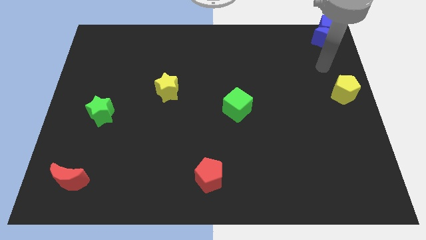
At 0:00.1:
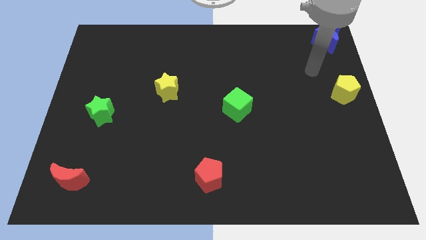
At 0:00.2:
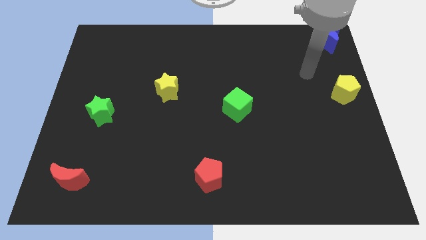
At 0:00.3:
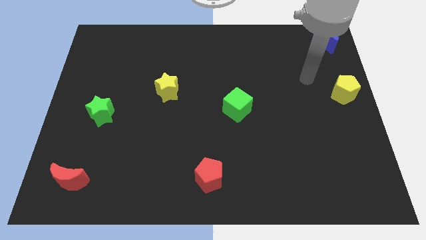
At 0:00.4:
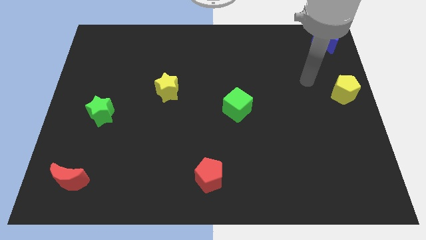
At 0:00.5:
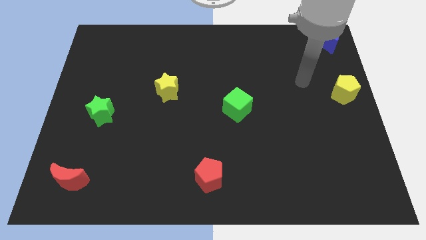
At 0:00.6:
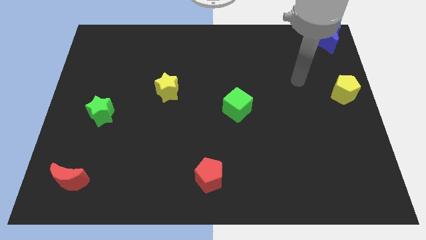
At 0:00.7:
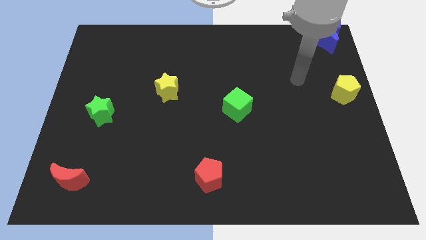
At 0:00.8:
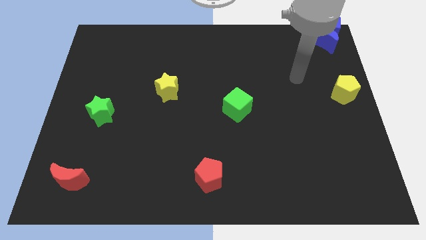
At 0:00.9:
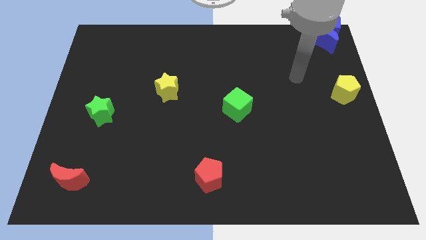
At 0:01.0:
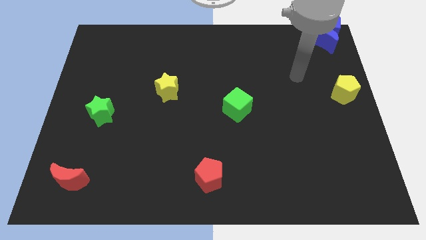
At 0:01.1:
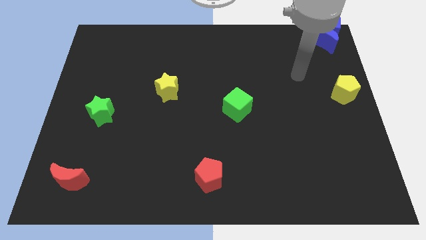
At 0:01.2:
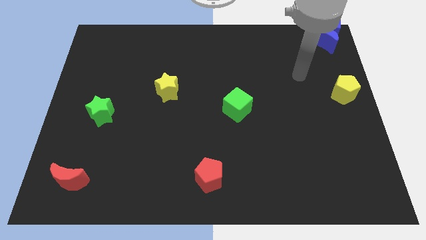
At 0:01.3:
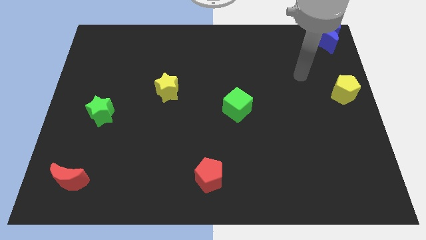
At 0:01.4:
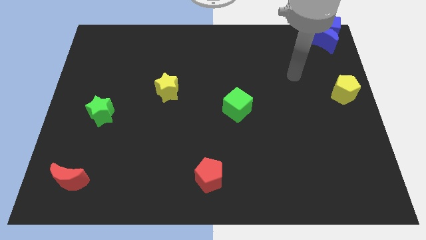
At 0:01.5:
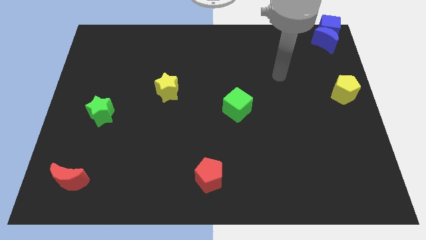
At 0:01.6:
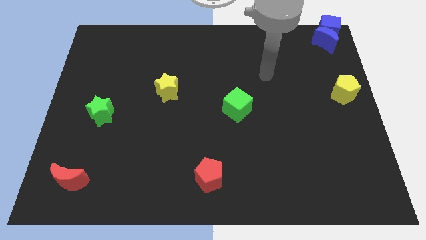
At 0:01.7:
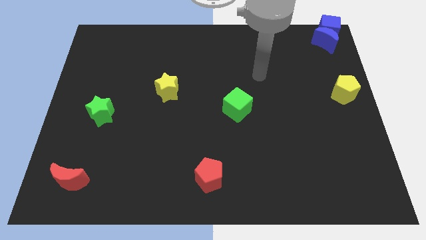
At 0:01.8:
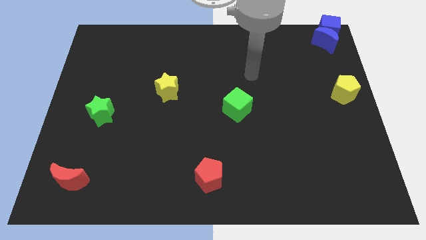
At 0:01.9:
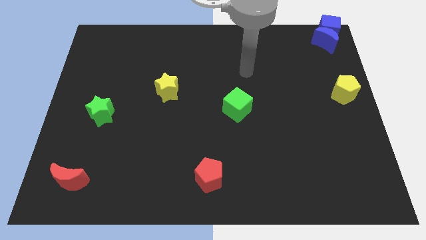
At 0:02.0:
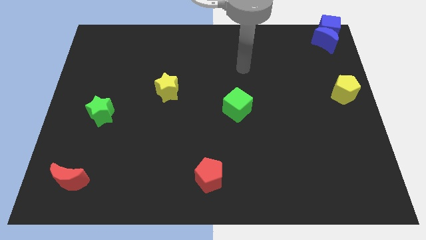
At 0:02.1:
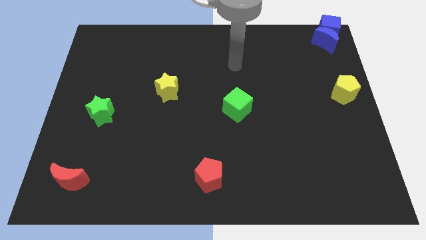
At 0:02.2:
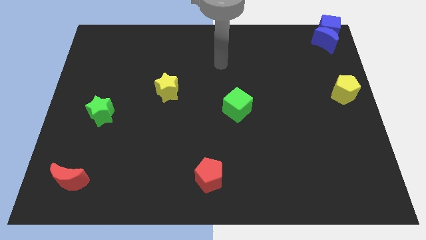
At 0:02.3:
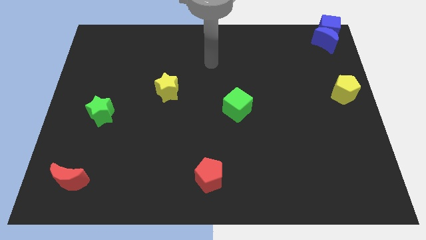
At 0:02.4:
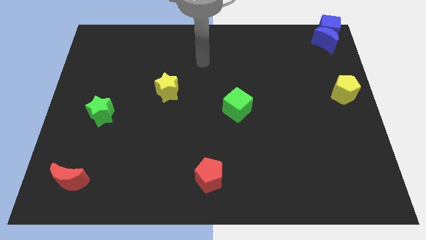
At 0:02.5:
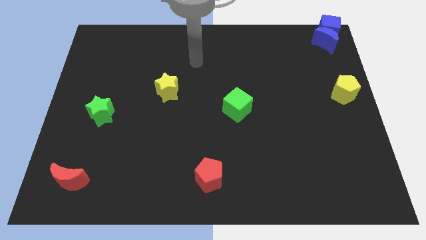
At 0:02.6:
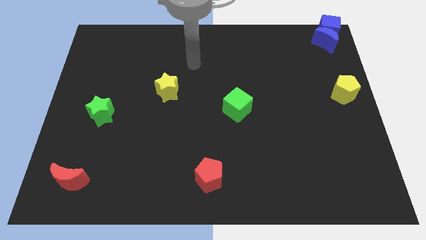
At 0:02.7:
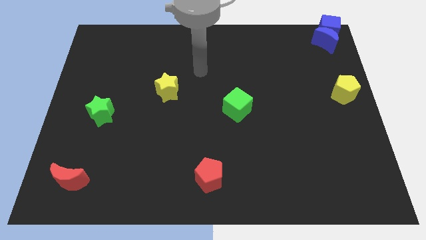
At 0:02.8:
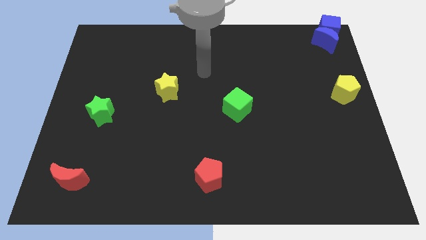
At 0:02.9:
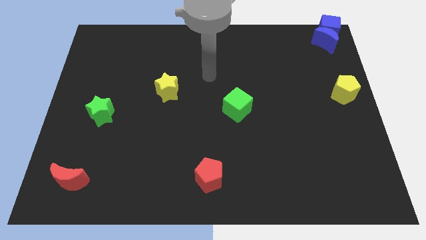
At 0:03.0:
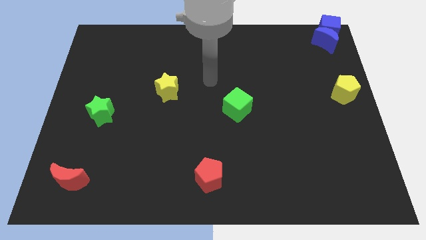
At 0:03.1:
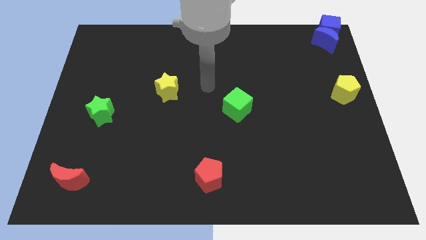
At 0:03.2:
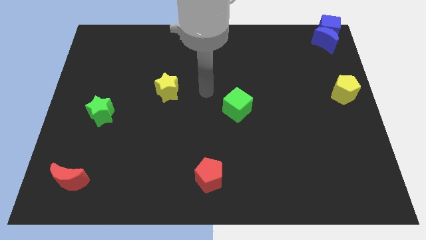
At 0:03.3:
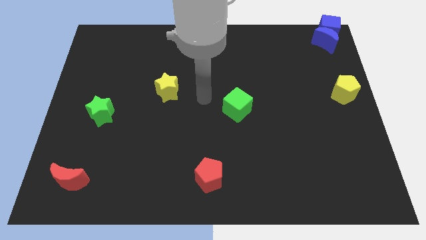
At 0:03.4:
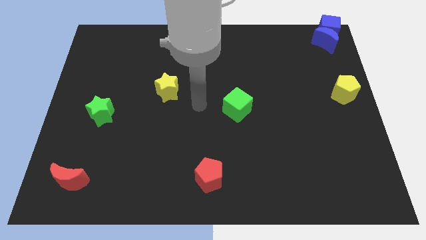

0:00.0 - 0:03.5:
place your arm in between the yellow star and green cube

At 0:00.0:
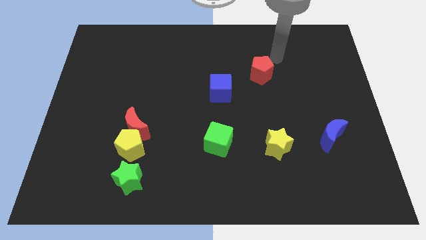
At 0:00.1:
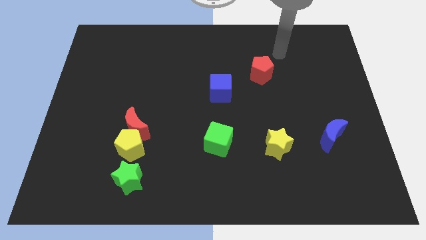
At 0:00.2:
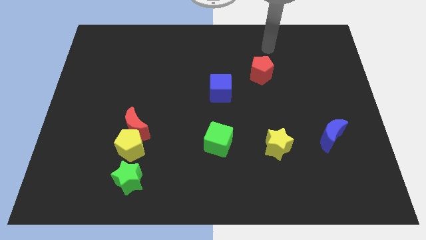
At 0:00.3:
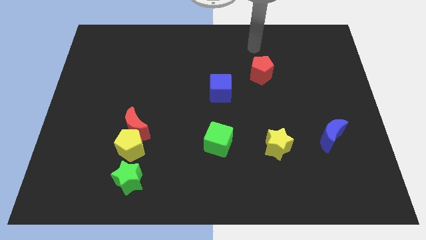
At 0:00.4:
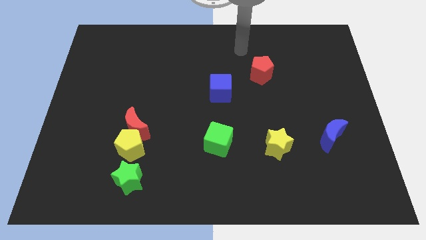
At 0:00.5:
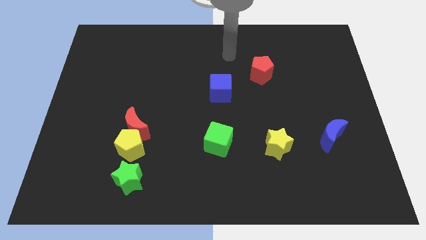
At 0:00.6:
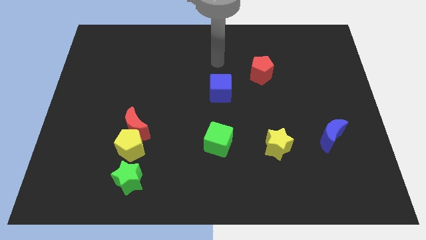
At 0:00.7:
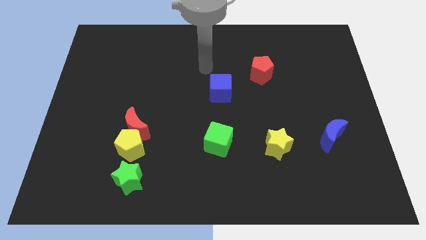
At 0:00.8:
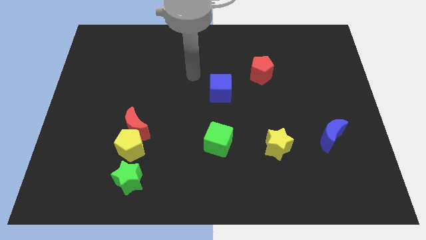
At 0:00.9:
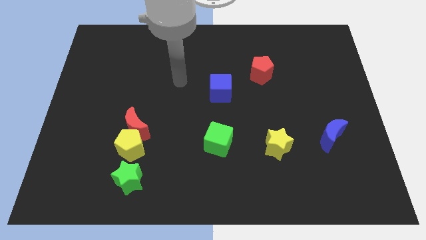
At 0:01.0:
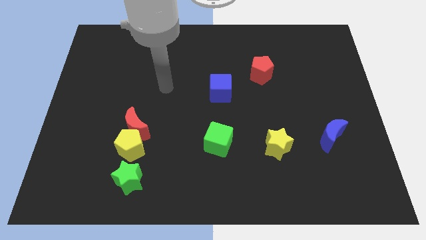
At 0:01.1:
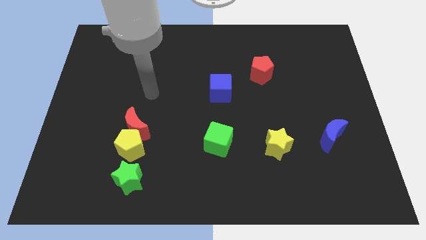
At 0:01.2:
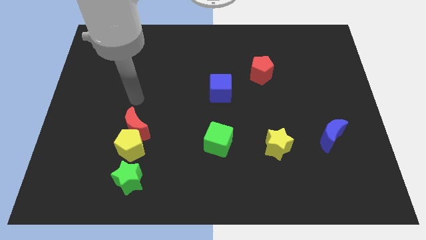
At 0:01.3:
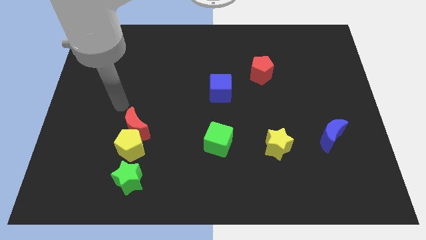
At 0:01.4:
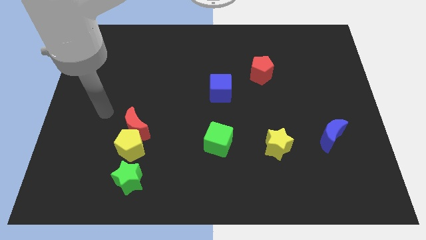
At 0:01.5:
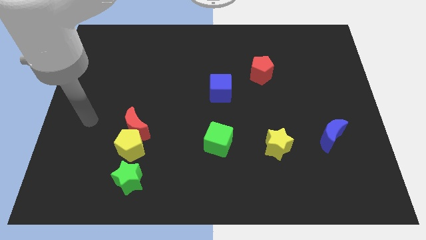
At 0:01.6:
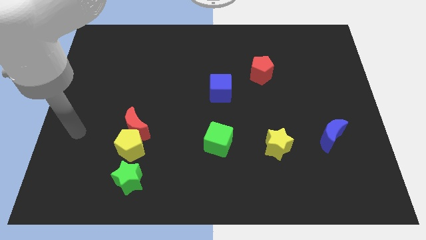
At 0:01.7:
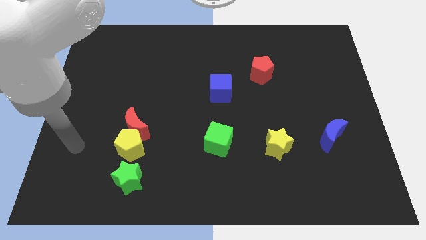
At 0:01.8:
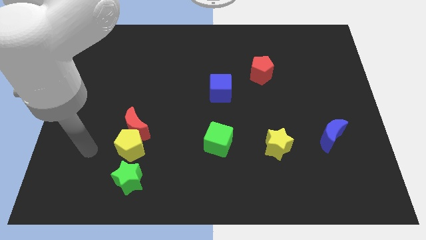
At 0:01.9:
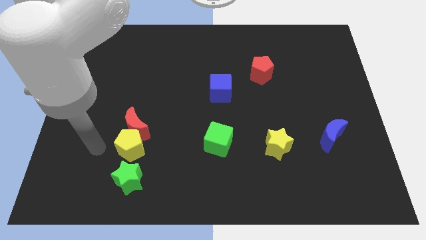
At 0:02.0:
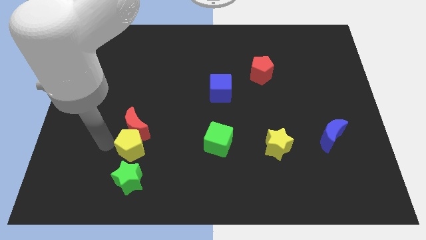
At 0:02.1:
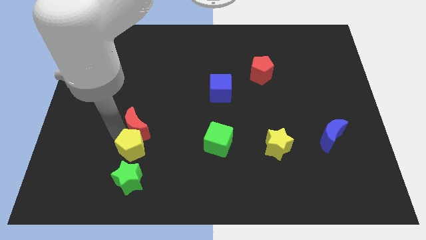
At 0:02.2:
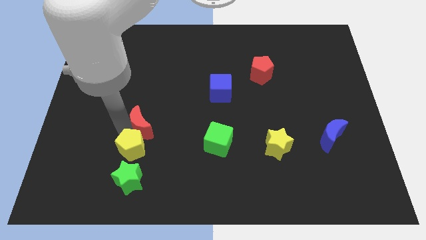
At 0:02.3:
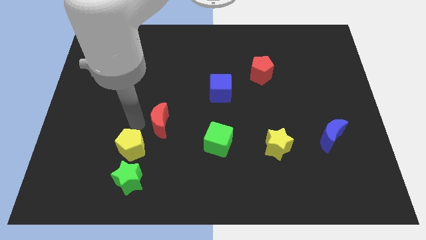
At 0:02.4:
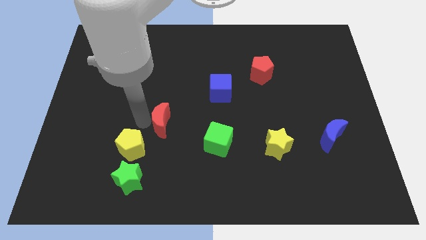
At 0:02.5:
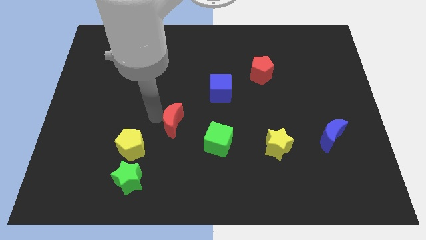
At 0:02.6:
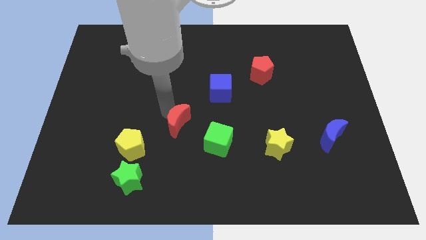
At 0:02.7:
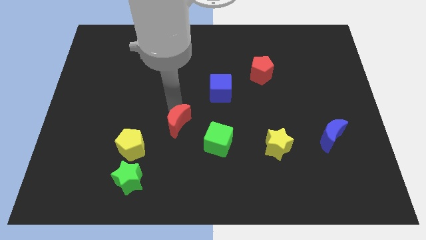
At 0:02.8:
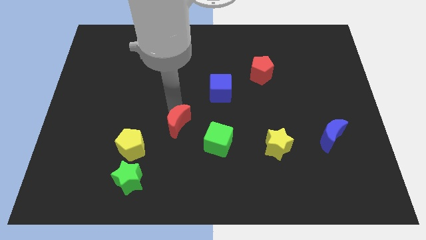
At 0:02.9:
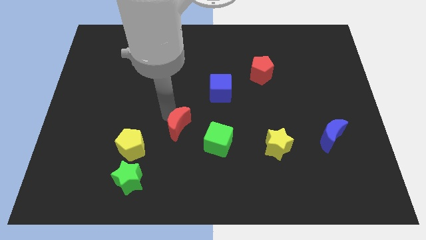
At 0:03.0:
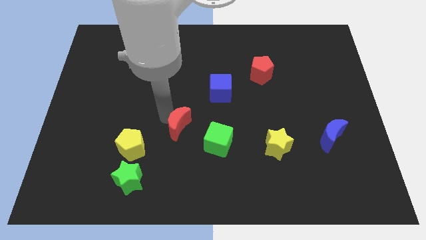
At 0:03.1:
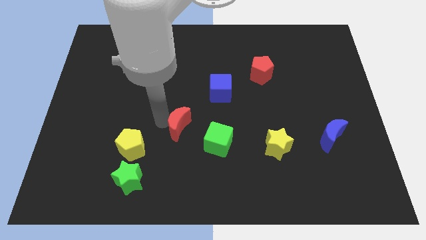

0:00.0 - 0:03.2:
push red crescent towards green cube

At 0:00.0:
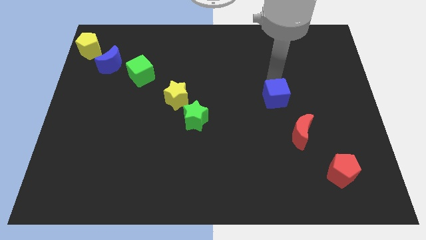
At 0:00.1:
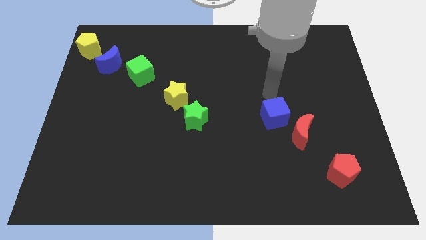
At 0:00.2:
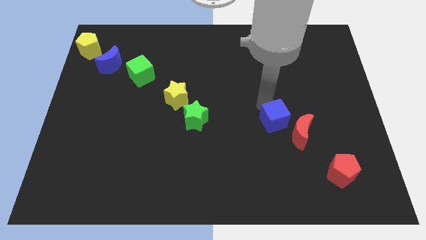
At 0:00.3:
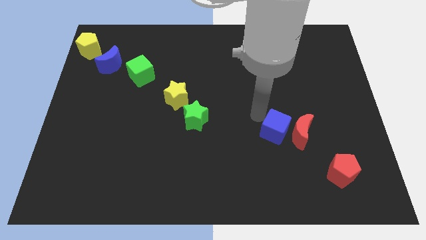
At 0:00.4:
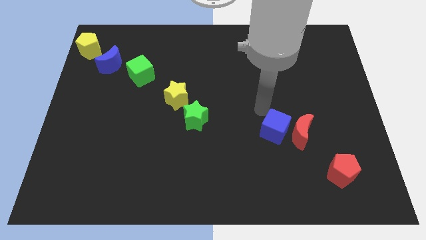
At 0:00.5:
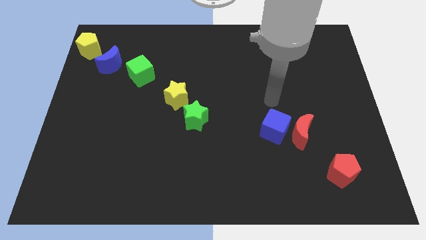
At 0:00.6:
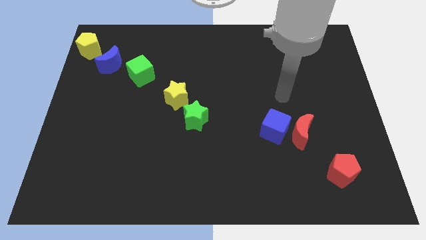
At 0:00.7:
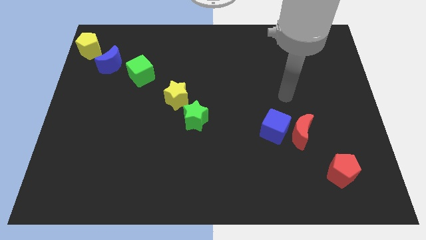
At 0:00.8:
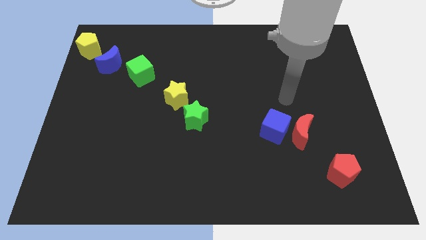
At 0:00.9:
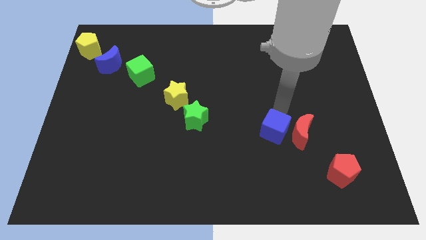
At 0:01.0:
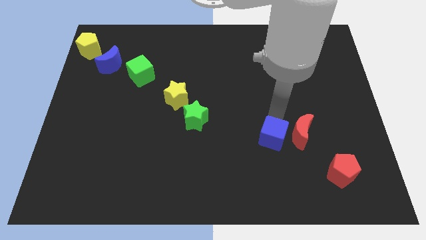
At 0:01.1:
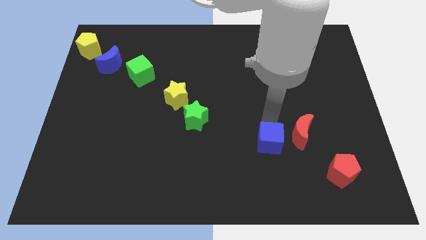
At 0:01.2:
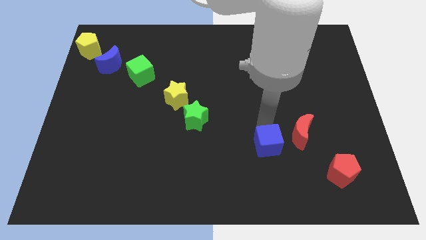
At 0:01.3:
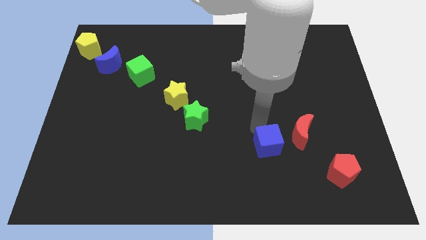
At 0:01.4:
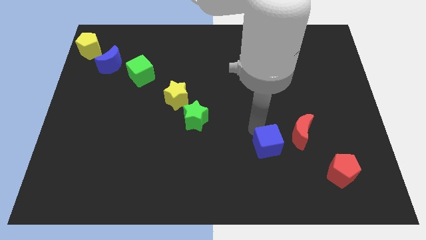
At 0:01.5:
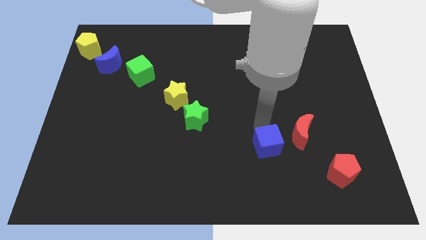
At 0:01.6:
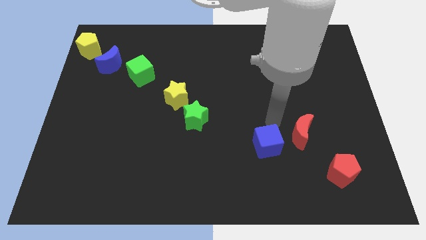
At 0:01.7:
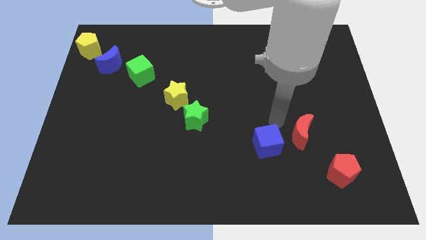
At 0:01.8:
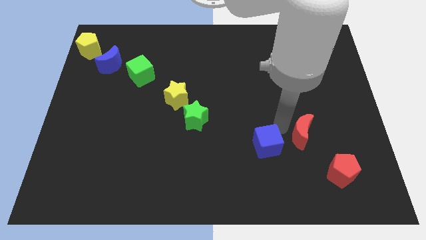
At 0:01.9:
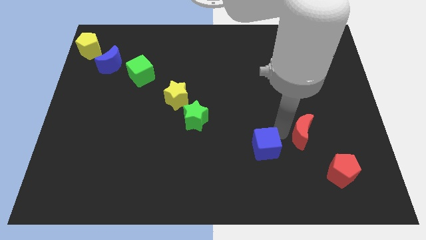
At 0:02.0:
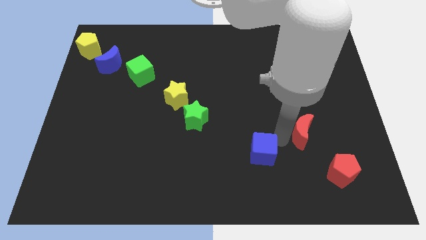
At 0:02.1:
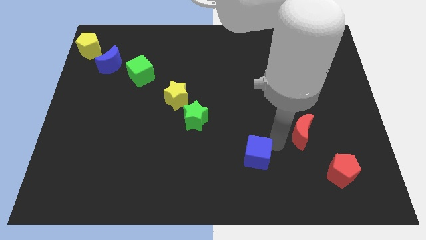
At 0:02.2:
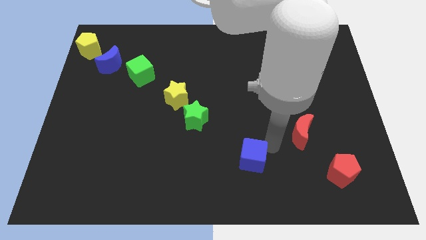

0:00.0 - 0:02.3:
move the blue cube towards the bottom left

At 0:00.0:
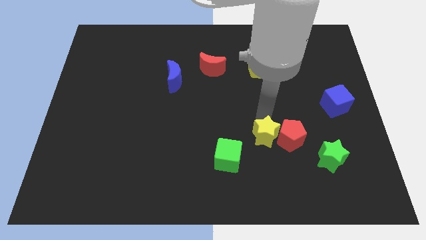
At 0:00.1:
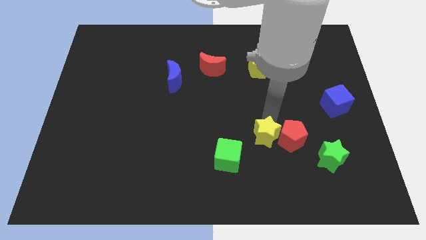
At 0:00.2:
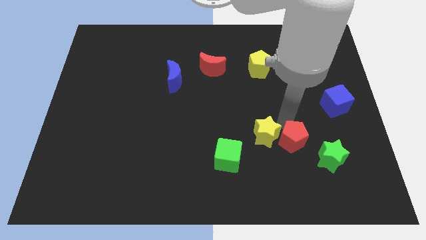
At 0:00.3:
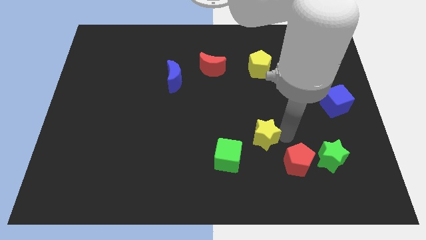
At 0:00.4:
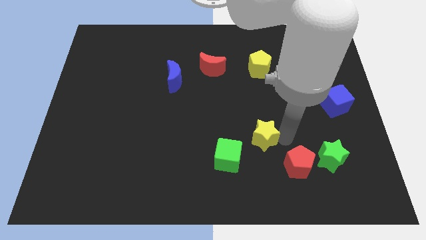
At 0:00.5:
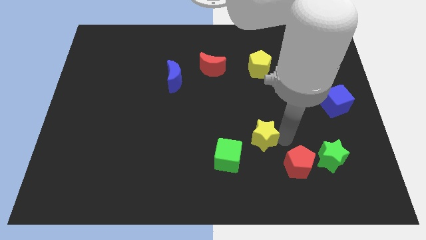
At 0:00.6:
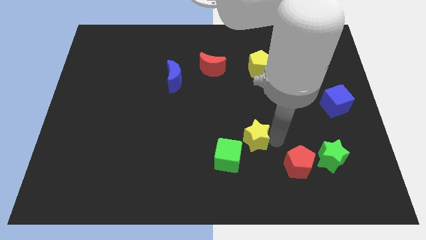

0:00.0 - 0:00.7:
place the red pentagon to the left side of the green star
